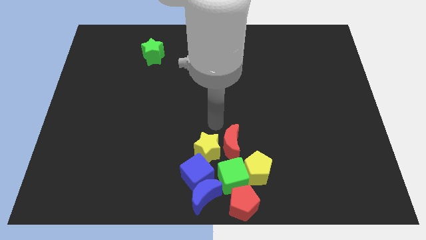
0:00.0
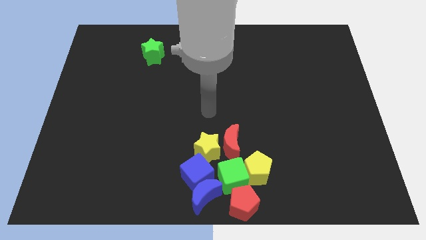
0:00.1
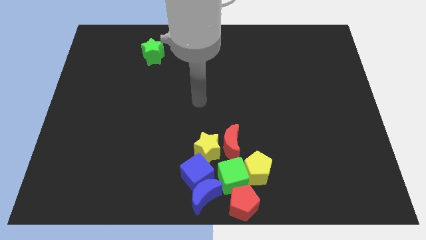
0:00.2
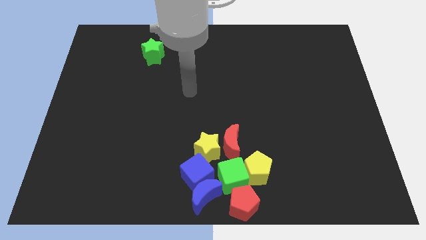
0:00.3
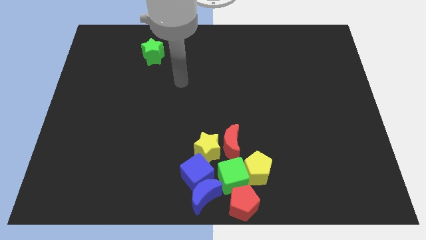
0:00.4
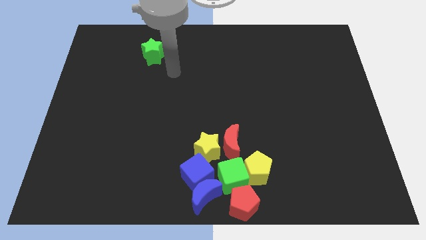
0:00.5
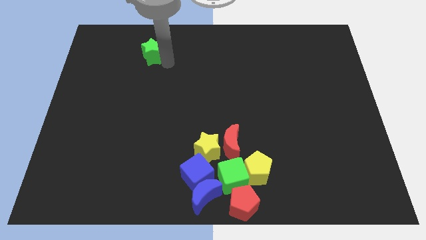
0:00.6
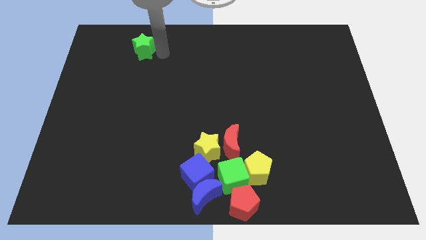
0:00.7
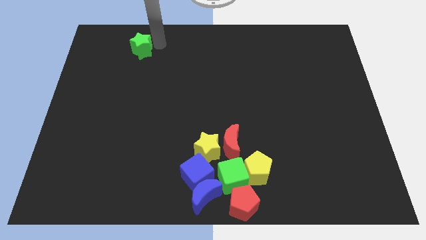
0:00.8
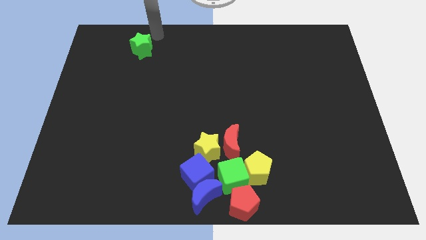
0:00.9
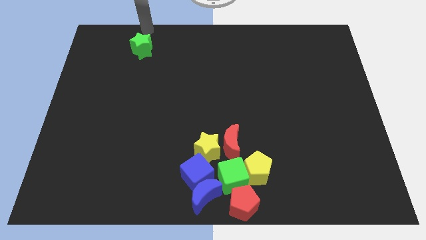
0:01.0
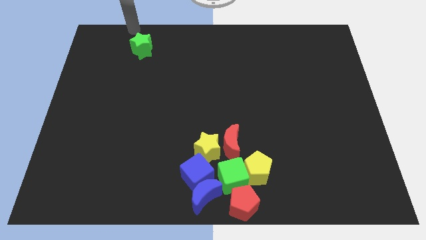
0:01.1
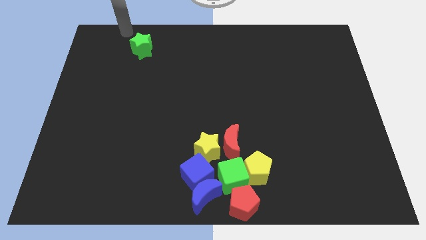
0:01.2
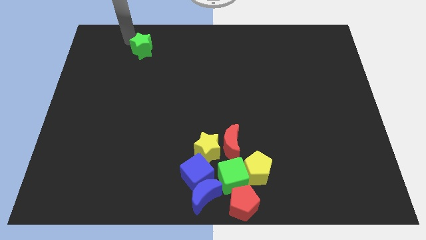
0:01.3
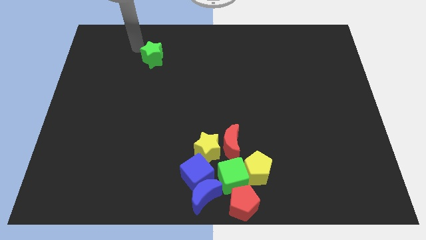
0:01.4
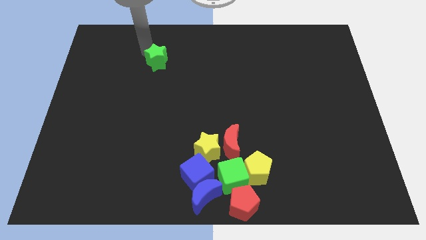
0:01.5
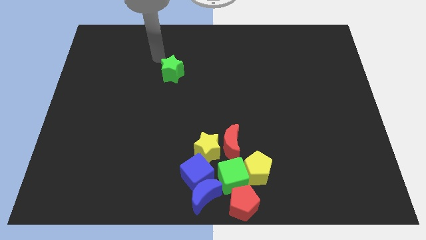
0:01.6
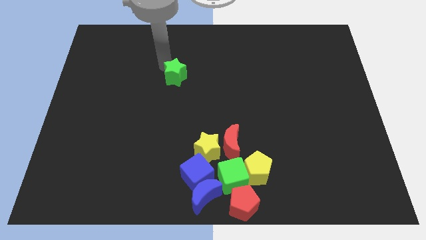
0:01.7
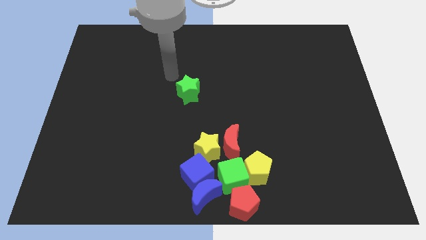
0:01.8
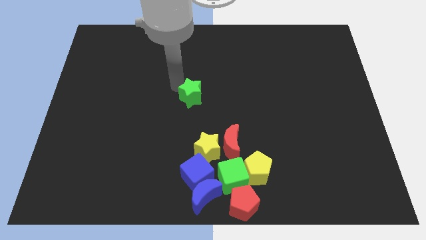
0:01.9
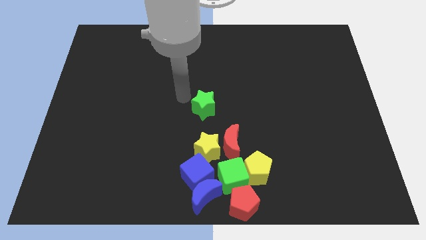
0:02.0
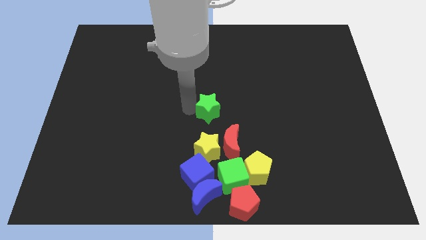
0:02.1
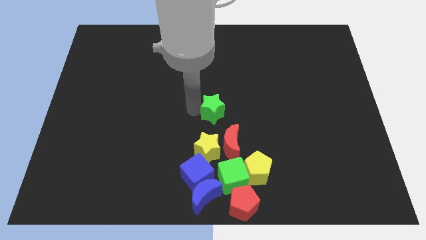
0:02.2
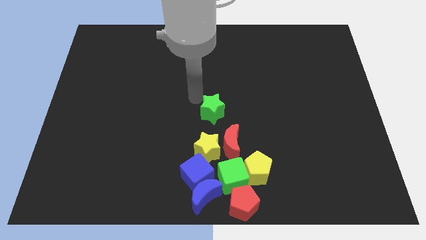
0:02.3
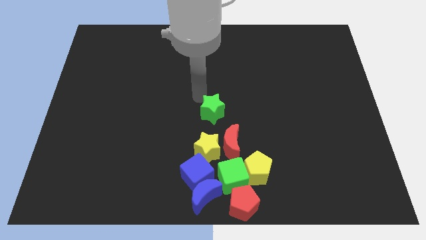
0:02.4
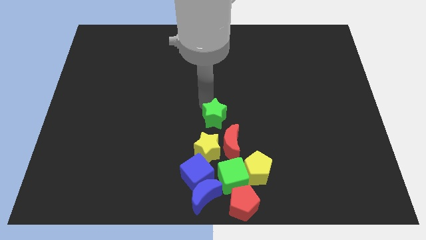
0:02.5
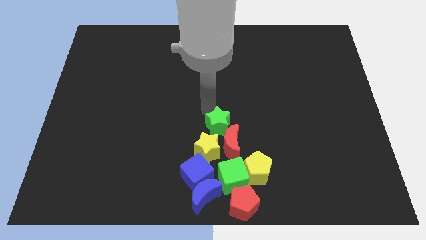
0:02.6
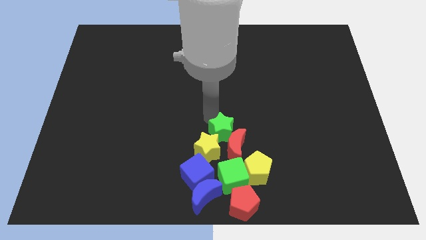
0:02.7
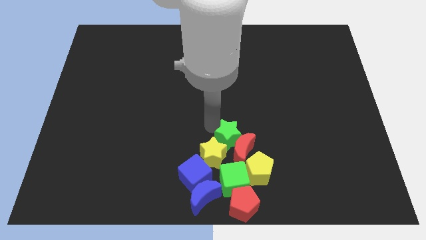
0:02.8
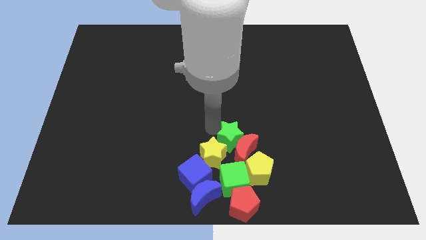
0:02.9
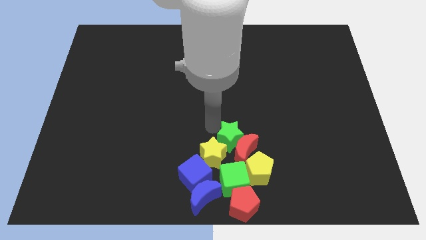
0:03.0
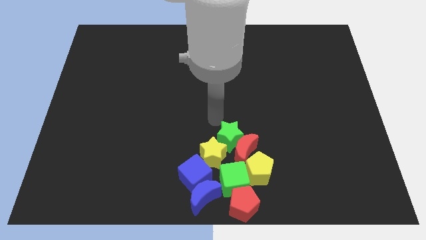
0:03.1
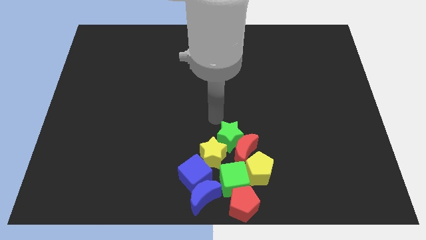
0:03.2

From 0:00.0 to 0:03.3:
move the green star into the top of the red crescent

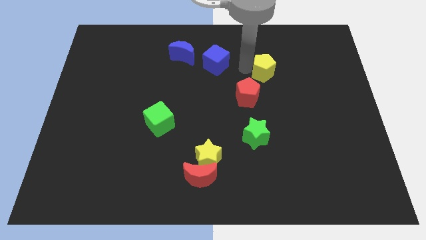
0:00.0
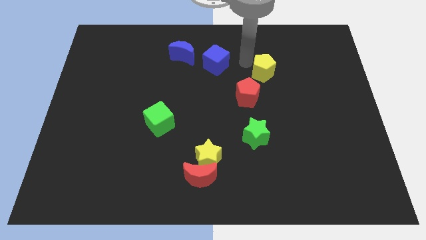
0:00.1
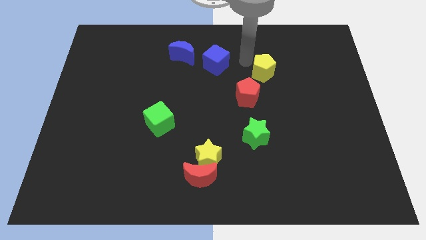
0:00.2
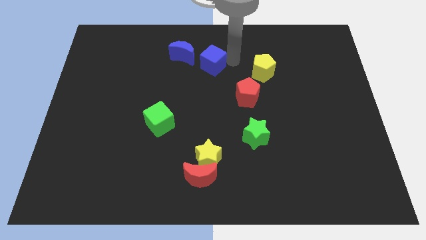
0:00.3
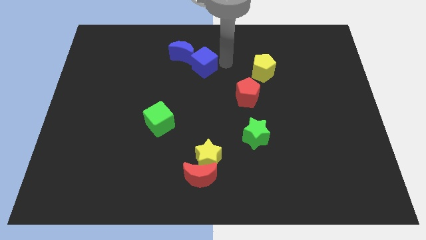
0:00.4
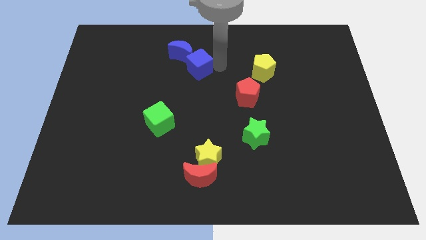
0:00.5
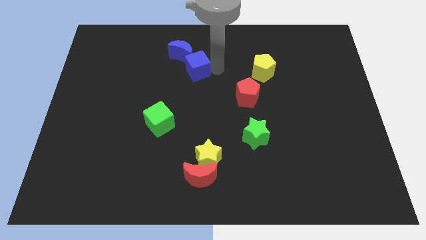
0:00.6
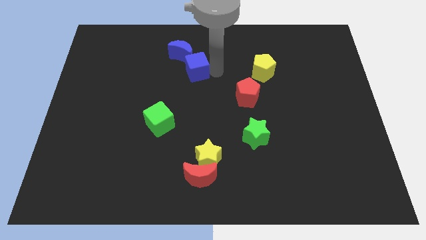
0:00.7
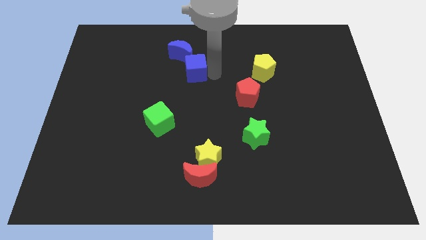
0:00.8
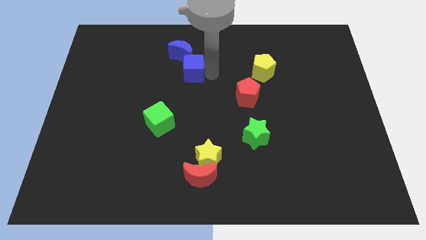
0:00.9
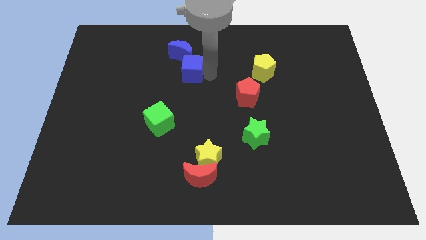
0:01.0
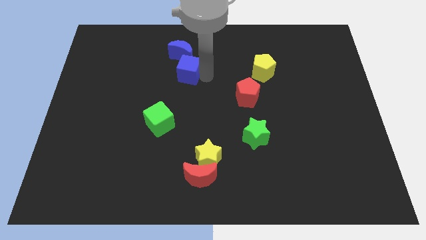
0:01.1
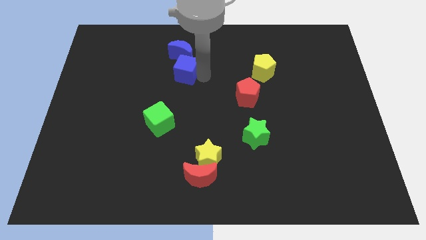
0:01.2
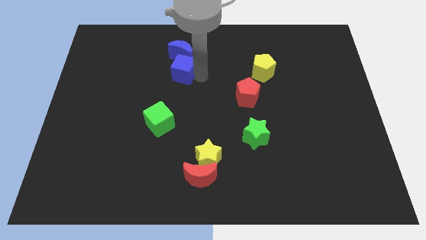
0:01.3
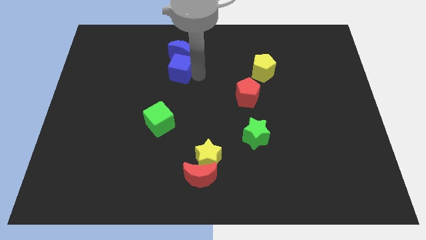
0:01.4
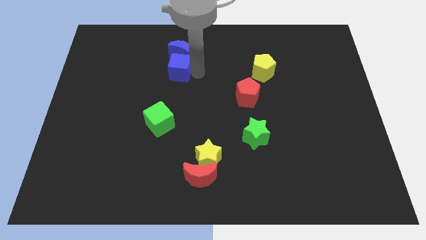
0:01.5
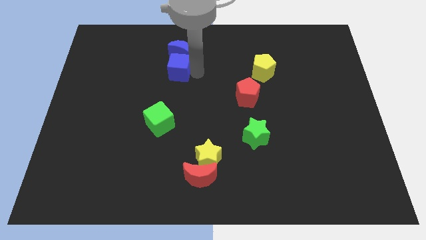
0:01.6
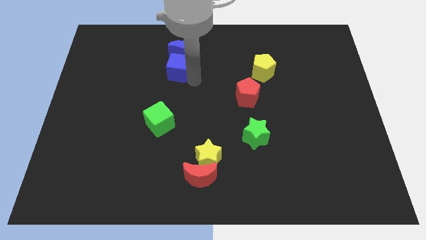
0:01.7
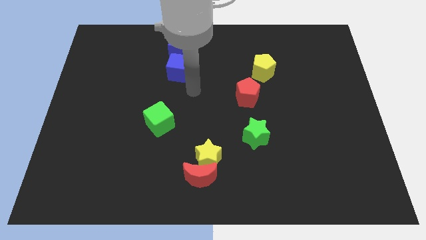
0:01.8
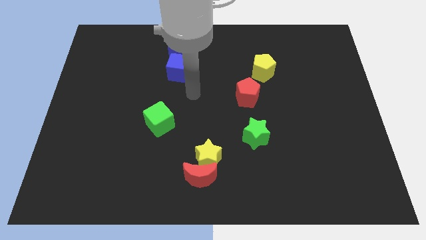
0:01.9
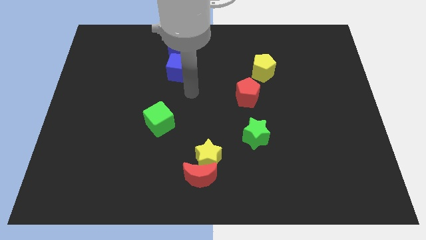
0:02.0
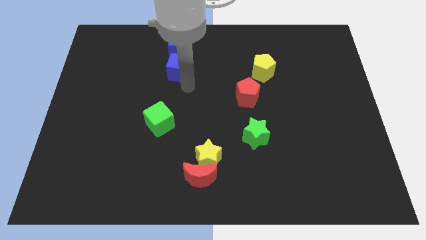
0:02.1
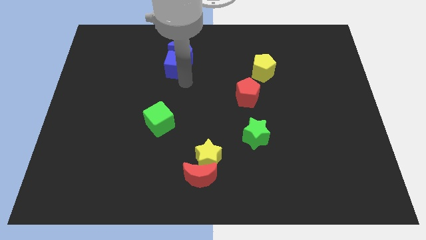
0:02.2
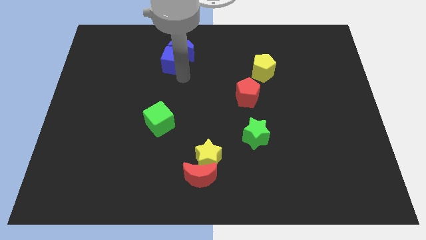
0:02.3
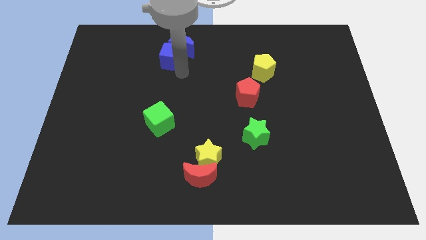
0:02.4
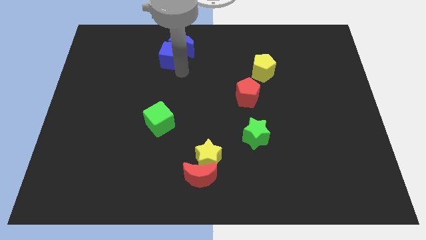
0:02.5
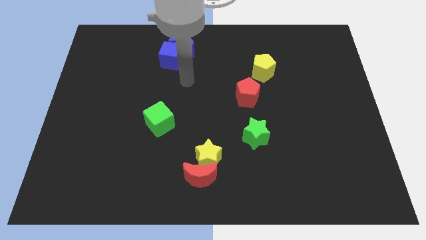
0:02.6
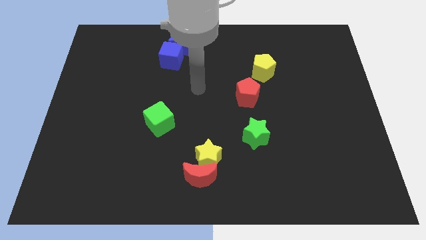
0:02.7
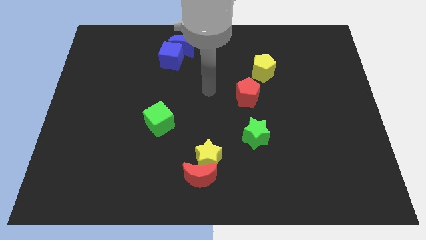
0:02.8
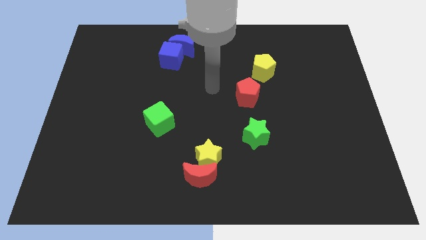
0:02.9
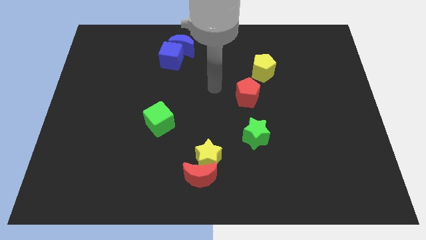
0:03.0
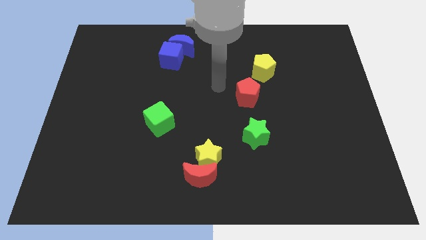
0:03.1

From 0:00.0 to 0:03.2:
push the blue cube into the bottom of the blue crescent

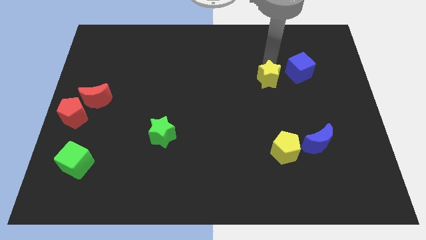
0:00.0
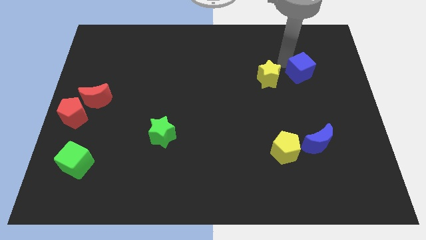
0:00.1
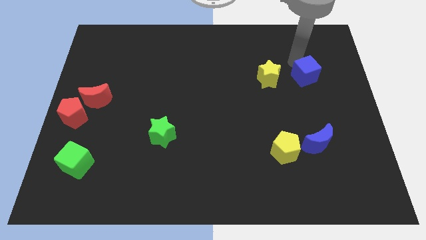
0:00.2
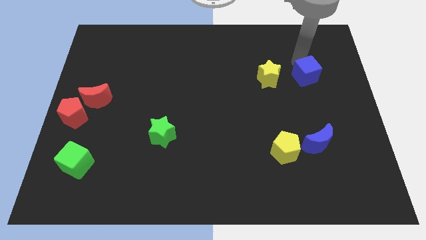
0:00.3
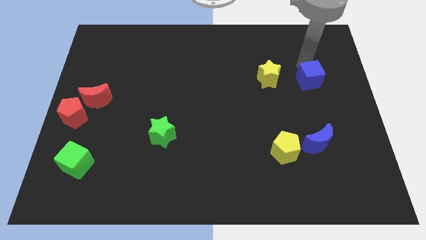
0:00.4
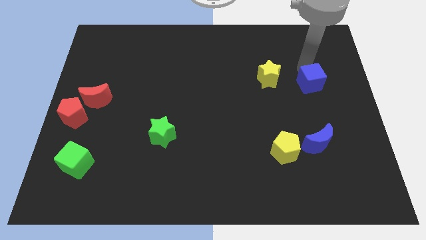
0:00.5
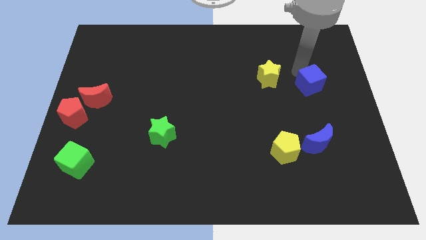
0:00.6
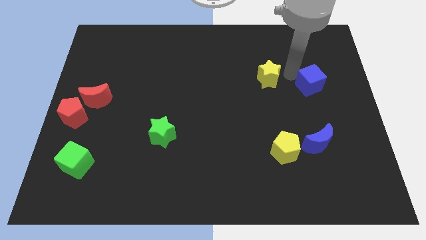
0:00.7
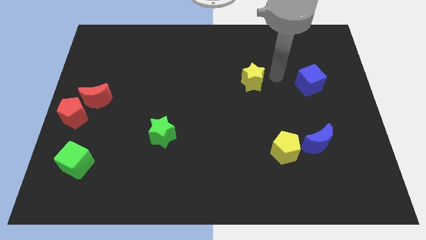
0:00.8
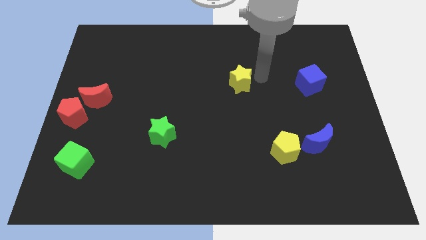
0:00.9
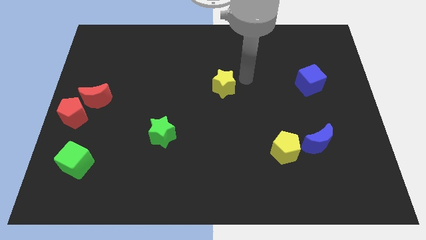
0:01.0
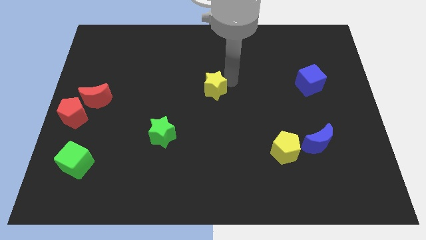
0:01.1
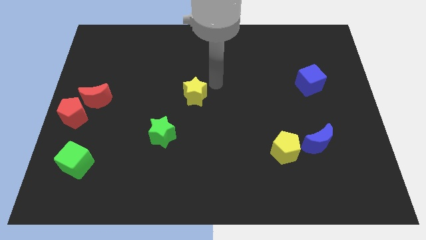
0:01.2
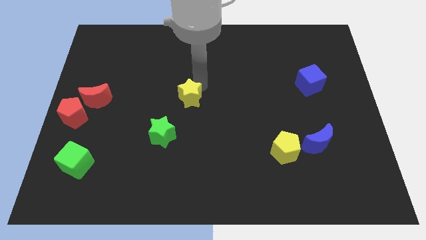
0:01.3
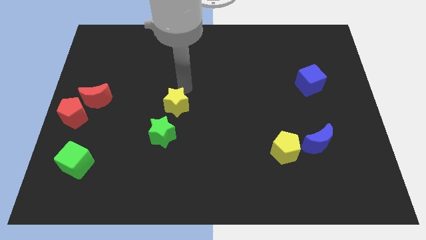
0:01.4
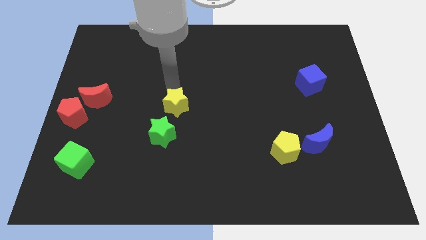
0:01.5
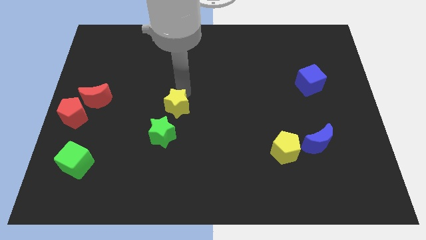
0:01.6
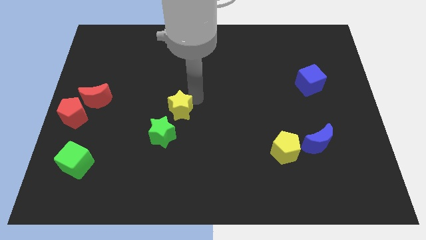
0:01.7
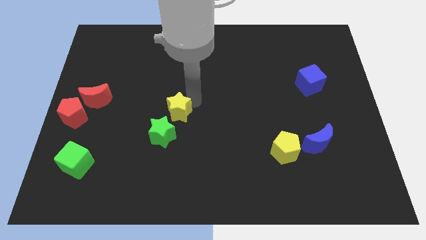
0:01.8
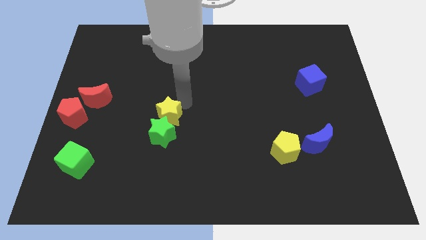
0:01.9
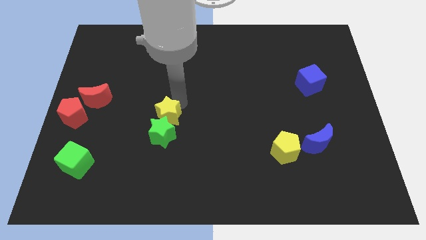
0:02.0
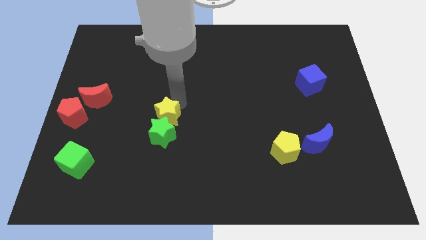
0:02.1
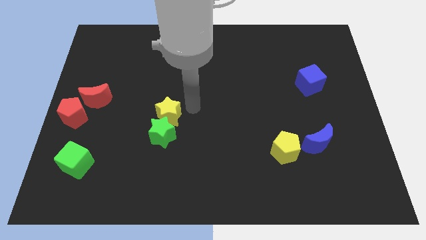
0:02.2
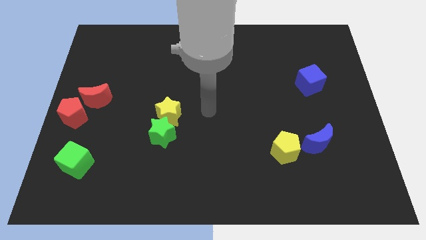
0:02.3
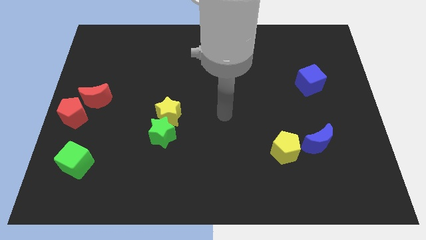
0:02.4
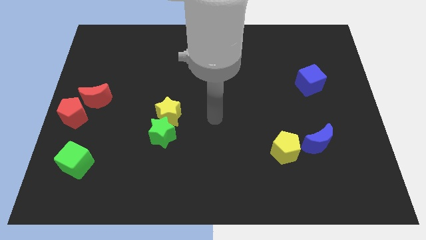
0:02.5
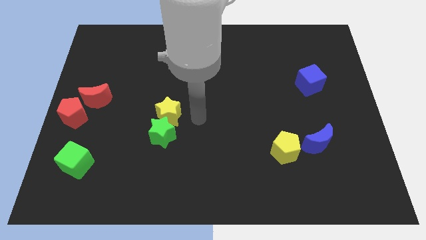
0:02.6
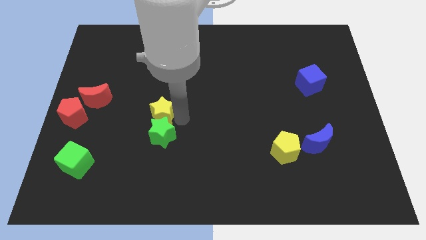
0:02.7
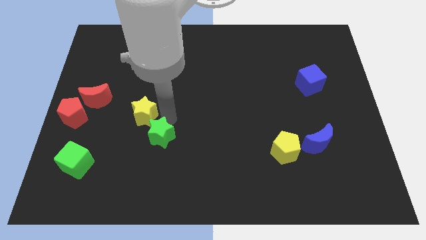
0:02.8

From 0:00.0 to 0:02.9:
place the yellow star above the green star
